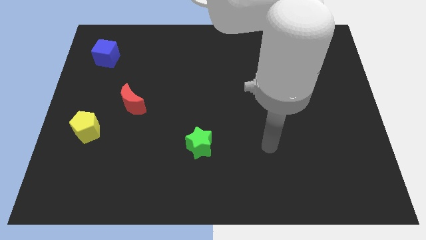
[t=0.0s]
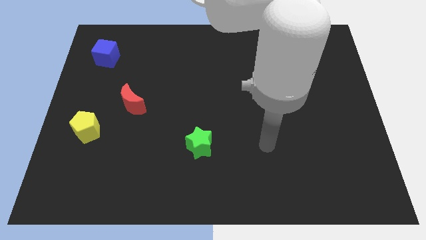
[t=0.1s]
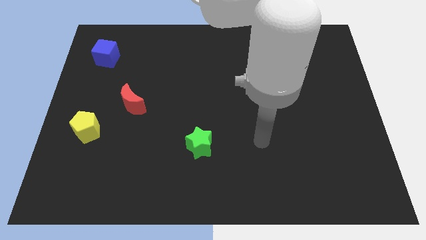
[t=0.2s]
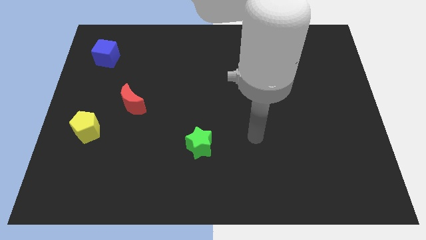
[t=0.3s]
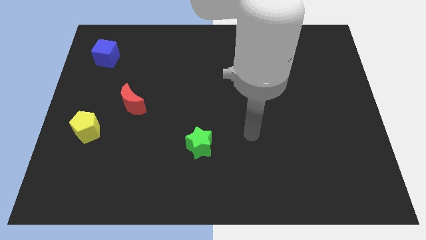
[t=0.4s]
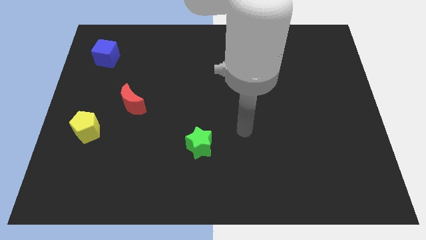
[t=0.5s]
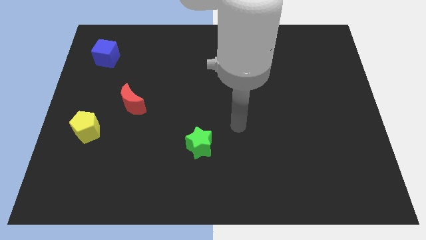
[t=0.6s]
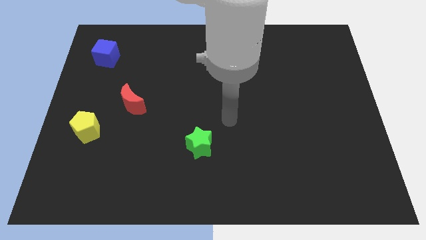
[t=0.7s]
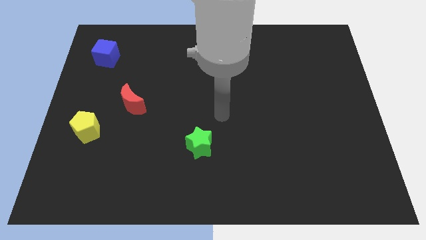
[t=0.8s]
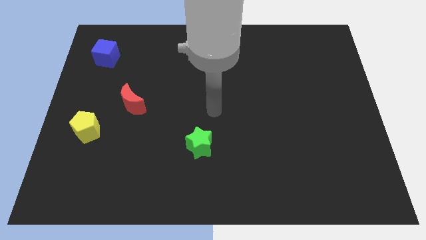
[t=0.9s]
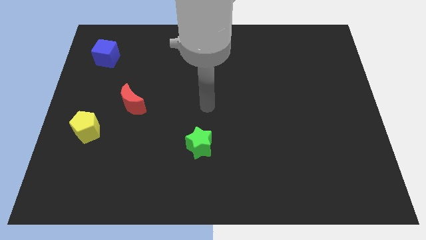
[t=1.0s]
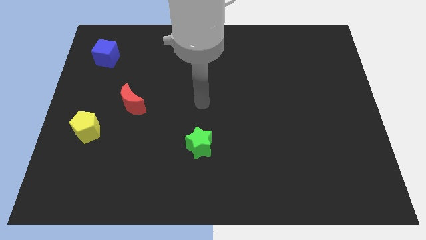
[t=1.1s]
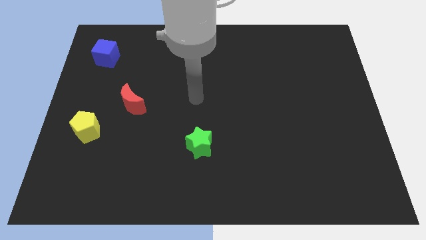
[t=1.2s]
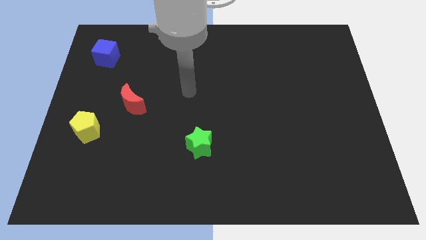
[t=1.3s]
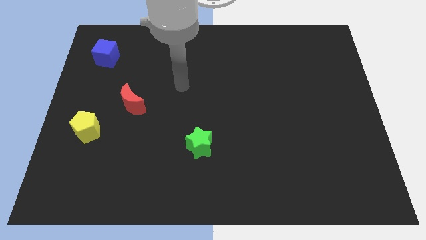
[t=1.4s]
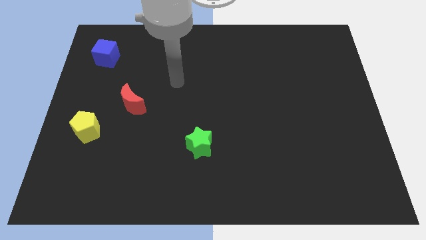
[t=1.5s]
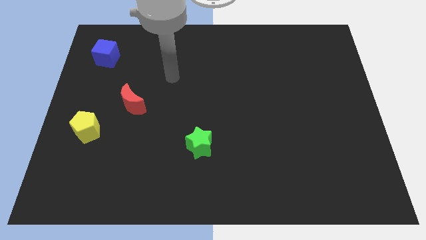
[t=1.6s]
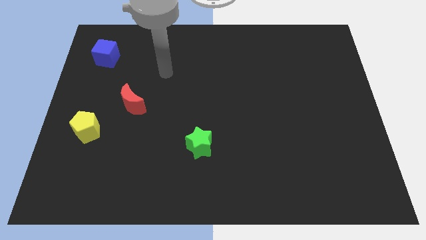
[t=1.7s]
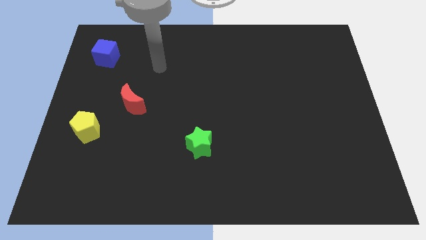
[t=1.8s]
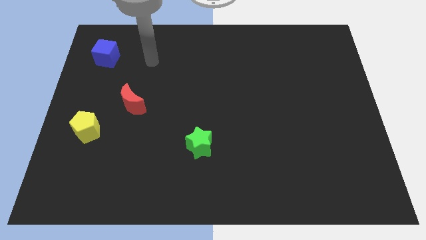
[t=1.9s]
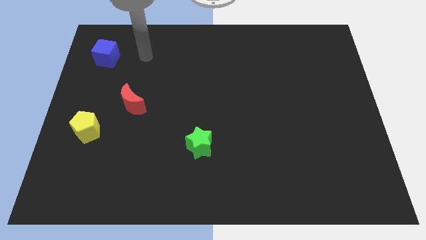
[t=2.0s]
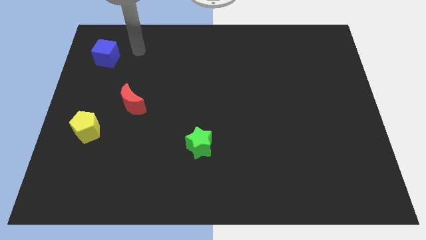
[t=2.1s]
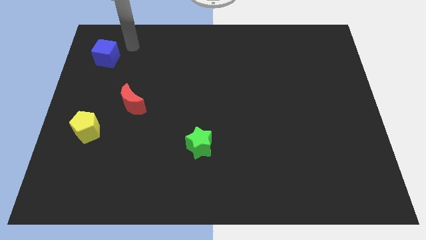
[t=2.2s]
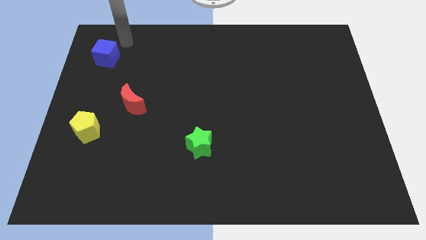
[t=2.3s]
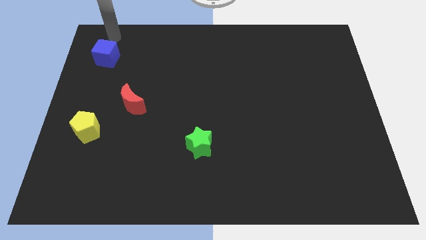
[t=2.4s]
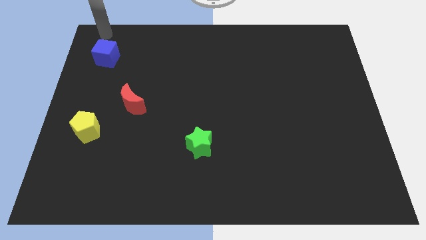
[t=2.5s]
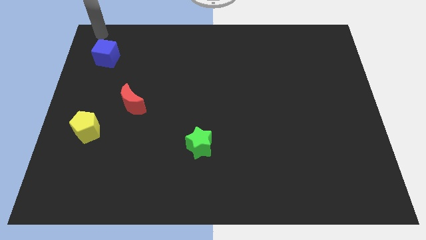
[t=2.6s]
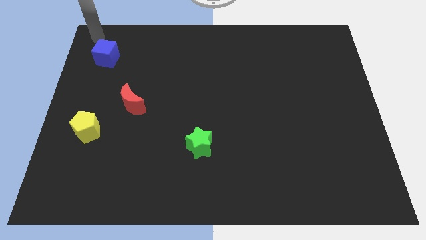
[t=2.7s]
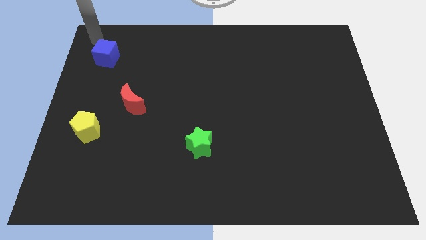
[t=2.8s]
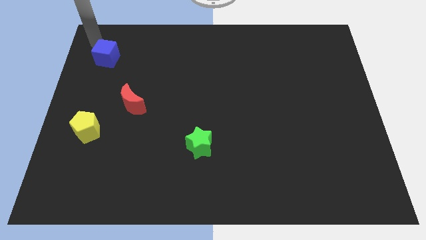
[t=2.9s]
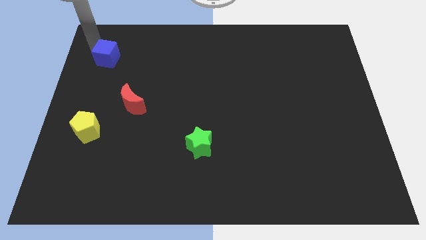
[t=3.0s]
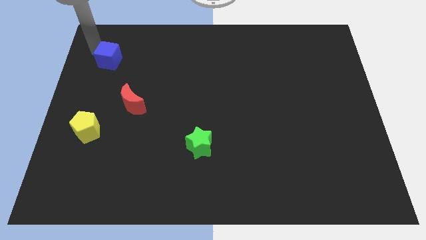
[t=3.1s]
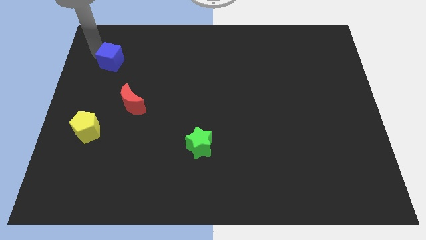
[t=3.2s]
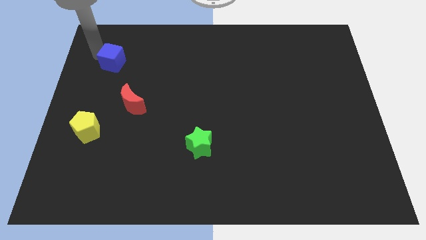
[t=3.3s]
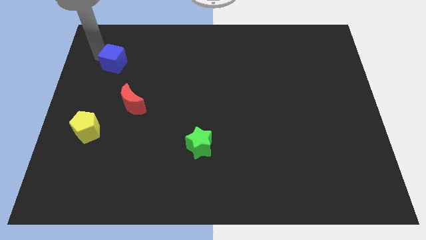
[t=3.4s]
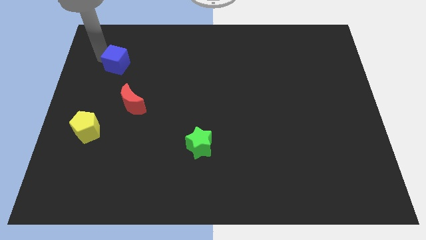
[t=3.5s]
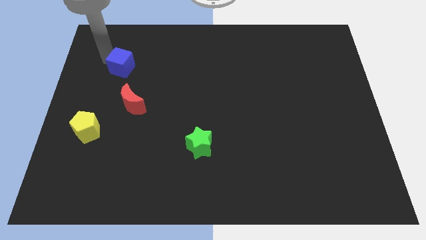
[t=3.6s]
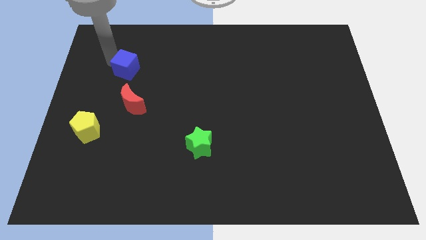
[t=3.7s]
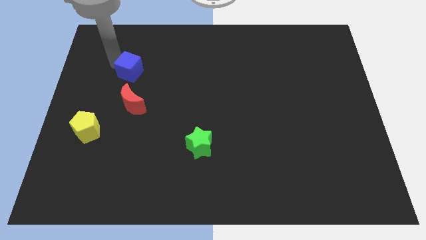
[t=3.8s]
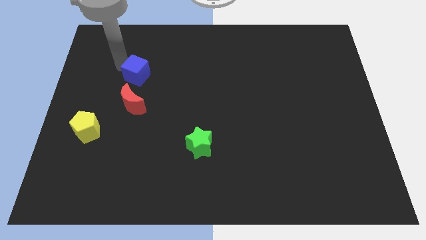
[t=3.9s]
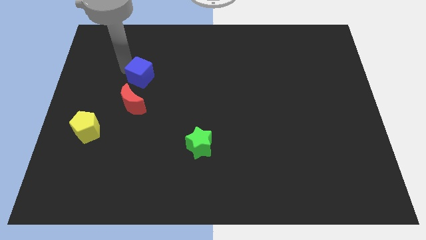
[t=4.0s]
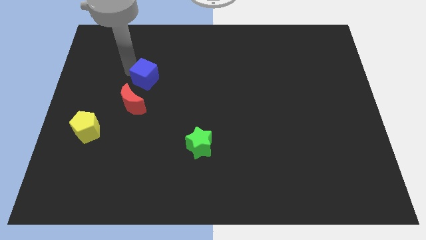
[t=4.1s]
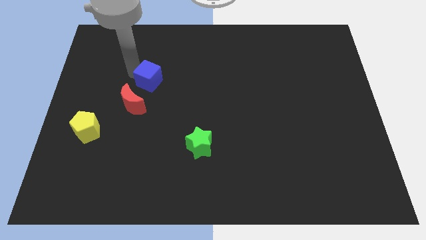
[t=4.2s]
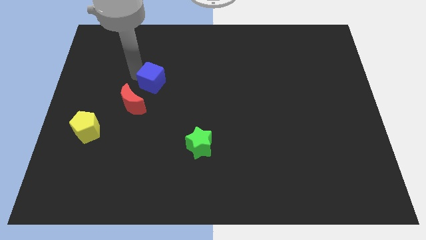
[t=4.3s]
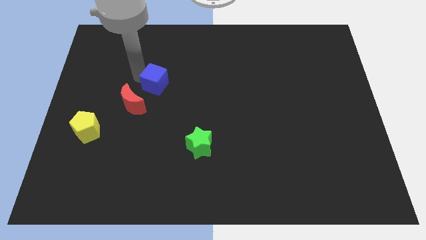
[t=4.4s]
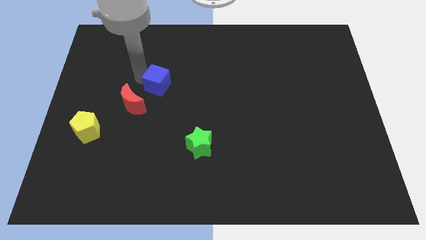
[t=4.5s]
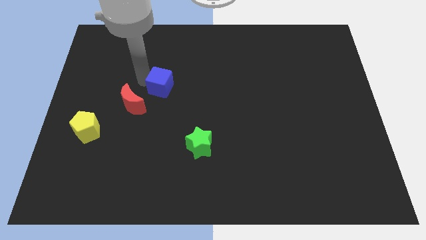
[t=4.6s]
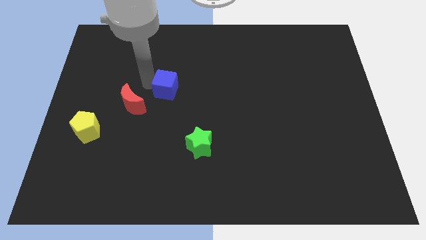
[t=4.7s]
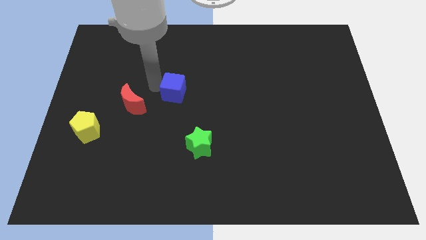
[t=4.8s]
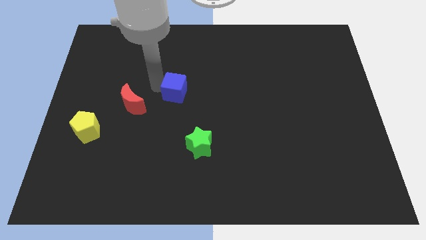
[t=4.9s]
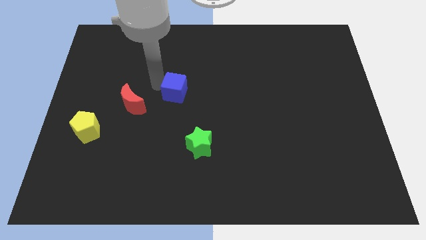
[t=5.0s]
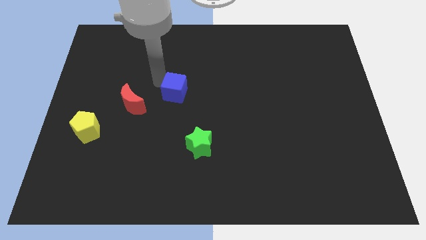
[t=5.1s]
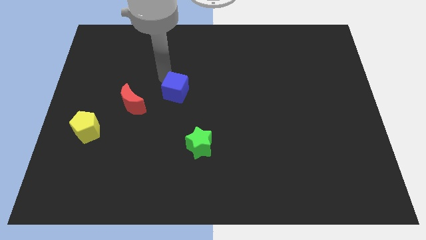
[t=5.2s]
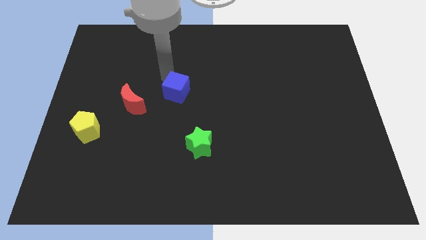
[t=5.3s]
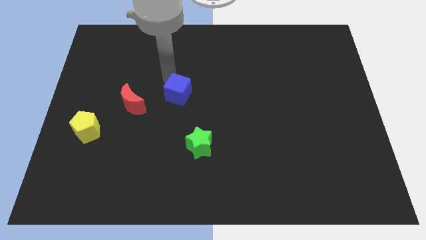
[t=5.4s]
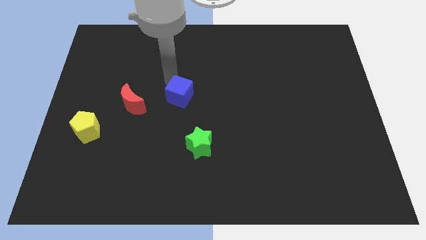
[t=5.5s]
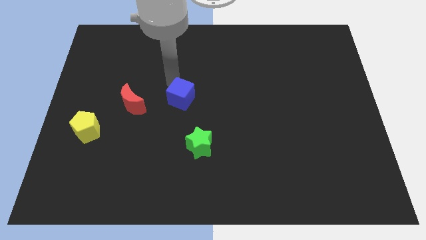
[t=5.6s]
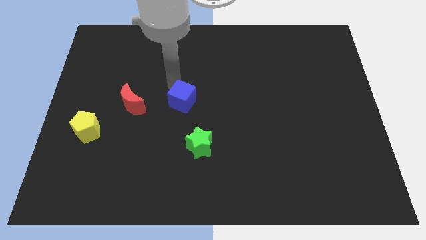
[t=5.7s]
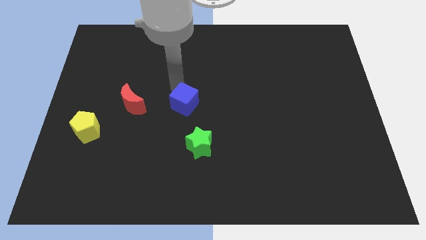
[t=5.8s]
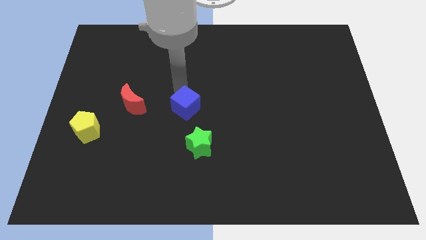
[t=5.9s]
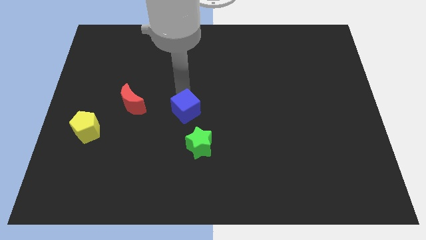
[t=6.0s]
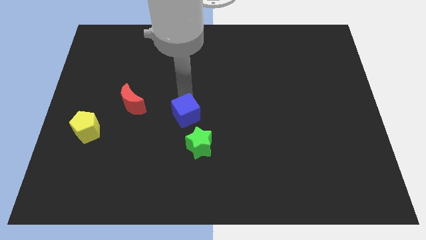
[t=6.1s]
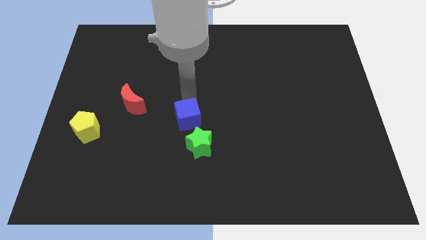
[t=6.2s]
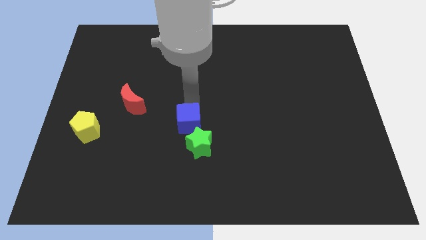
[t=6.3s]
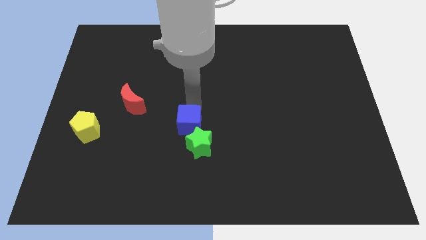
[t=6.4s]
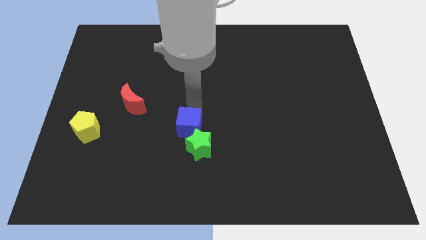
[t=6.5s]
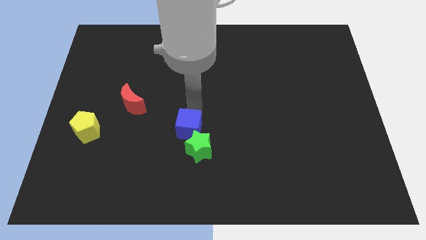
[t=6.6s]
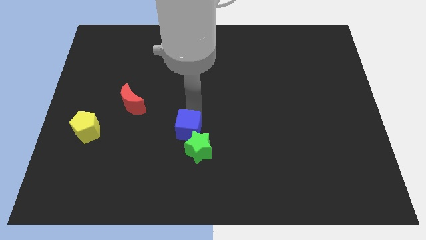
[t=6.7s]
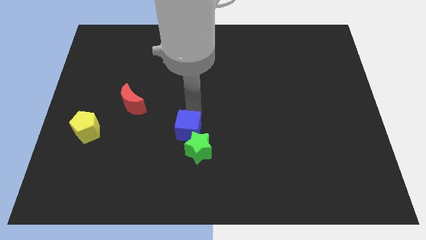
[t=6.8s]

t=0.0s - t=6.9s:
slide the blue cube next to the green block

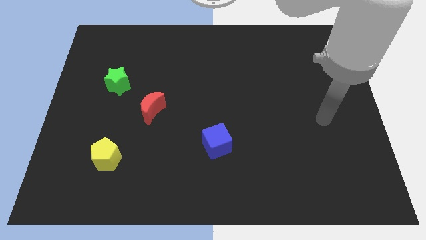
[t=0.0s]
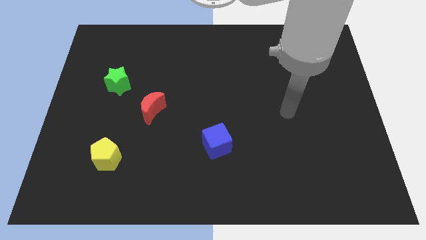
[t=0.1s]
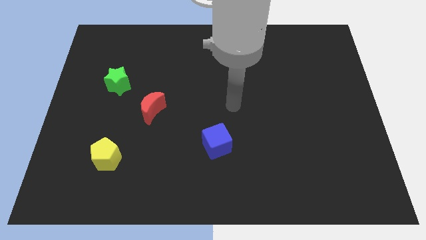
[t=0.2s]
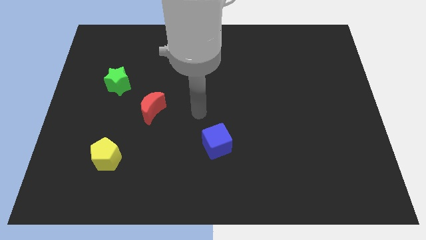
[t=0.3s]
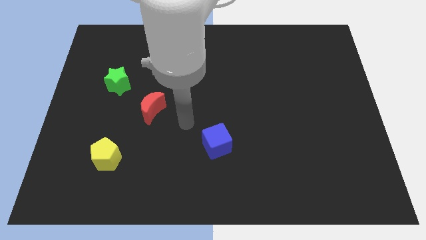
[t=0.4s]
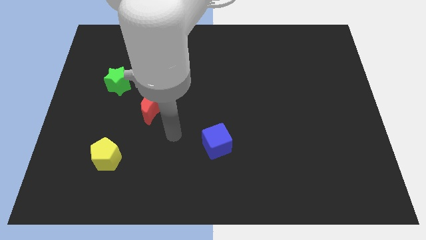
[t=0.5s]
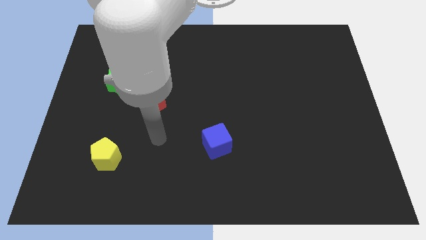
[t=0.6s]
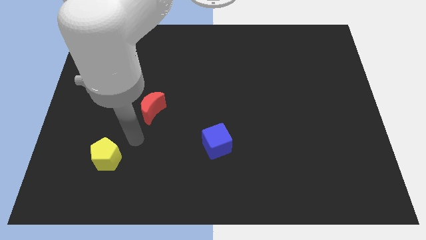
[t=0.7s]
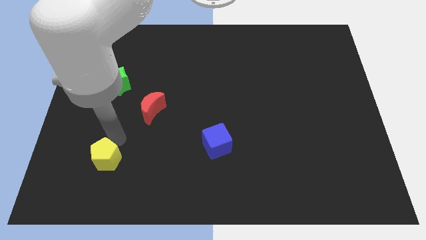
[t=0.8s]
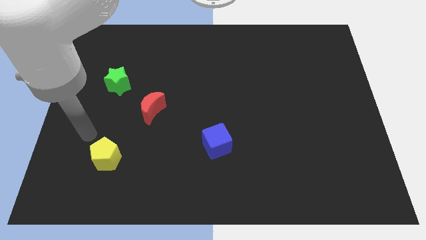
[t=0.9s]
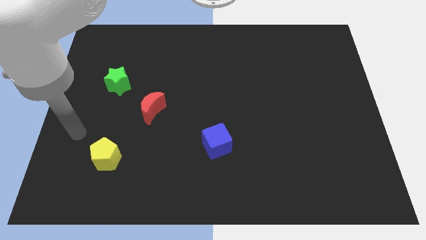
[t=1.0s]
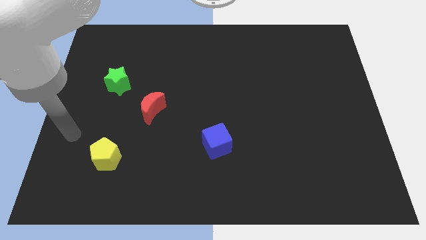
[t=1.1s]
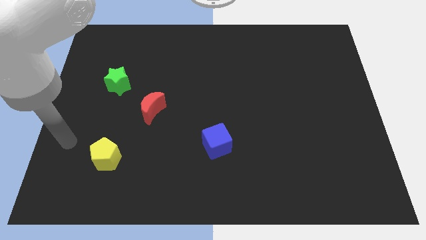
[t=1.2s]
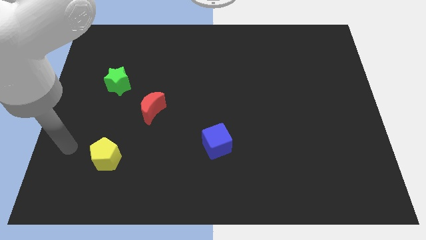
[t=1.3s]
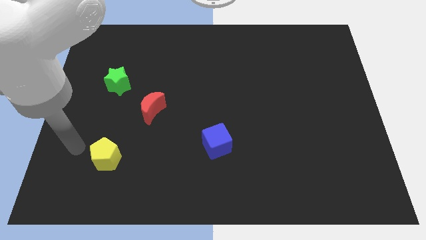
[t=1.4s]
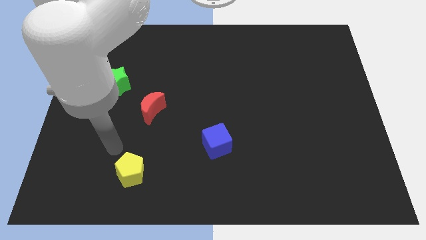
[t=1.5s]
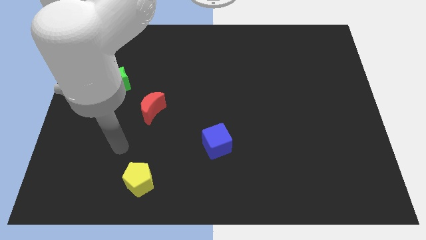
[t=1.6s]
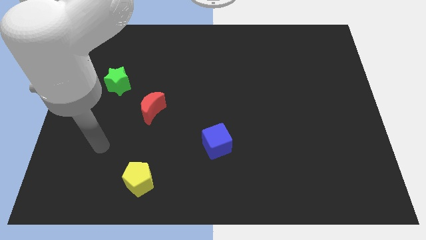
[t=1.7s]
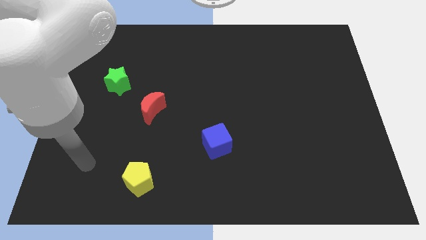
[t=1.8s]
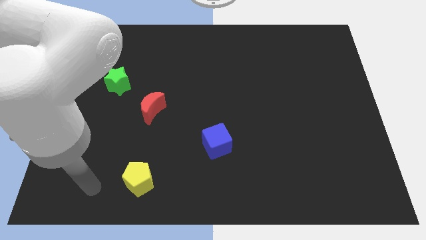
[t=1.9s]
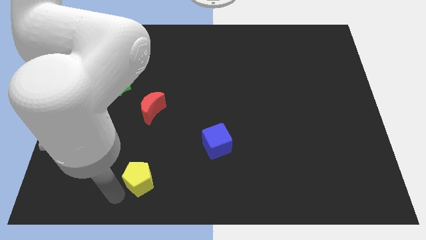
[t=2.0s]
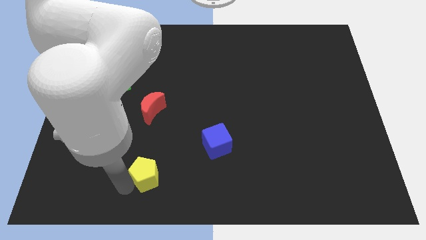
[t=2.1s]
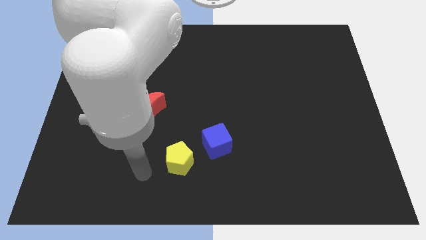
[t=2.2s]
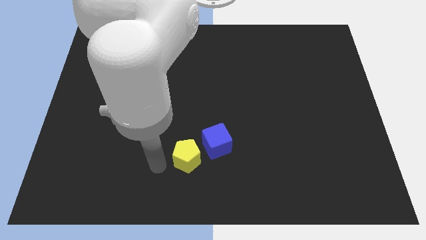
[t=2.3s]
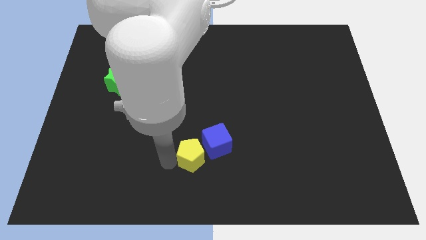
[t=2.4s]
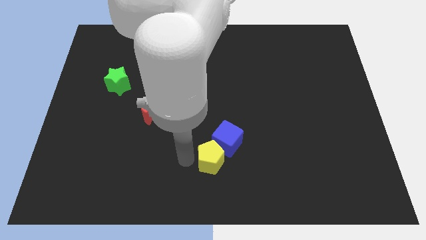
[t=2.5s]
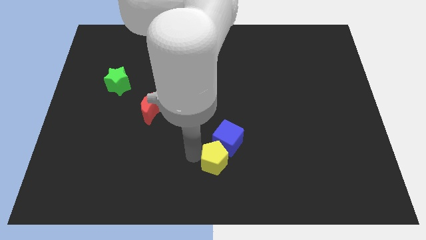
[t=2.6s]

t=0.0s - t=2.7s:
move the yellow pentagon towards the cube
